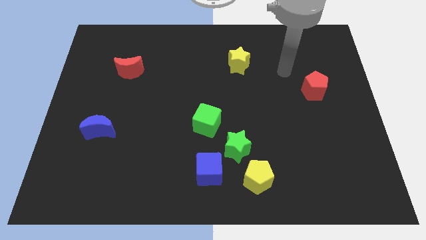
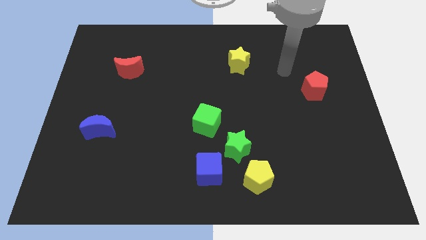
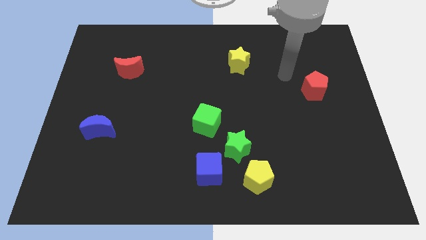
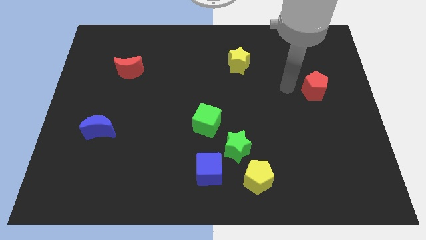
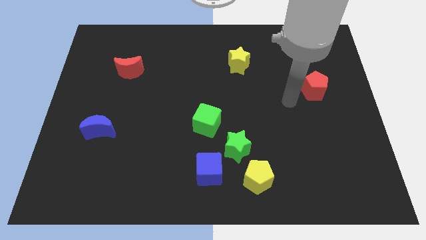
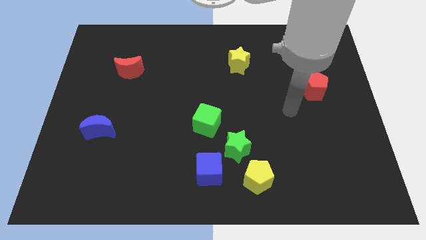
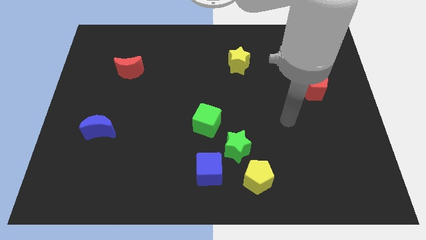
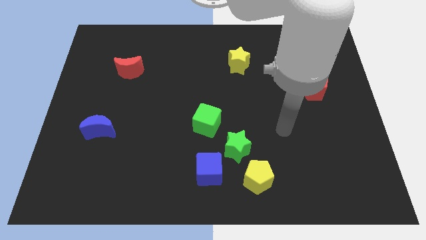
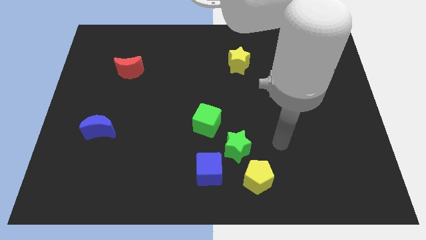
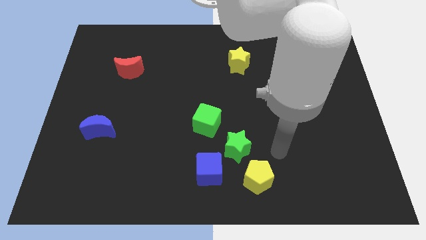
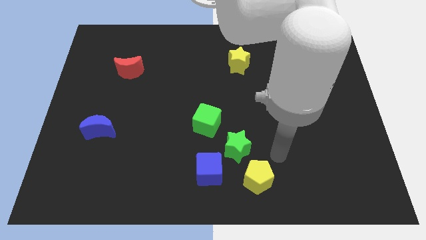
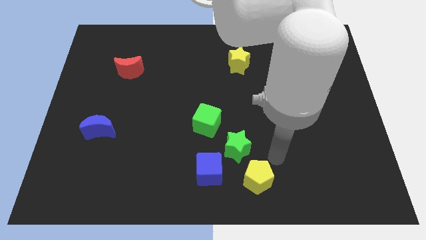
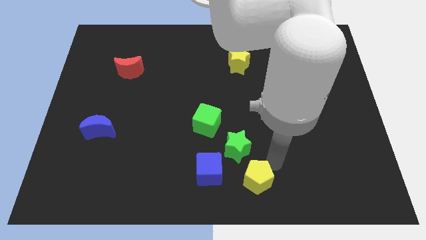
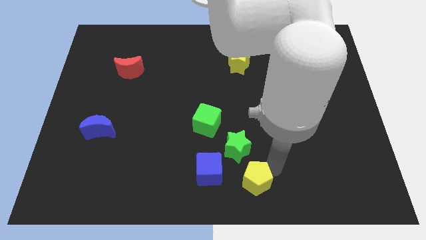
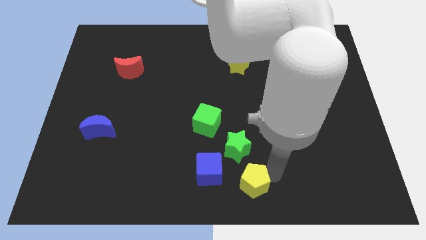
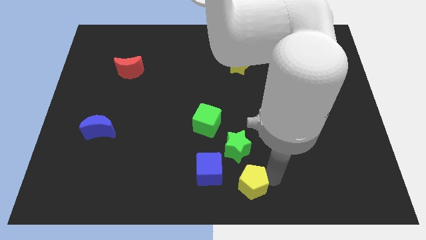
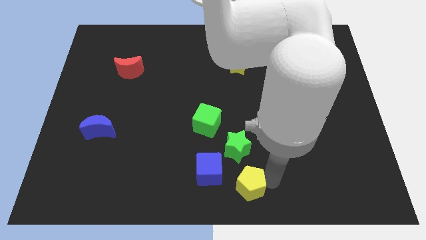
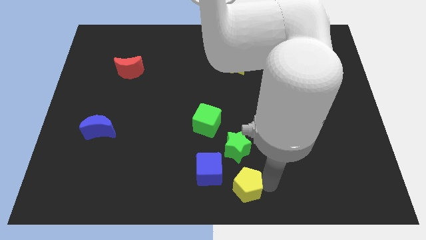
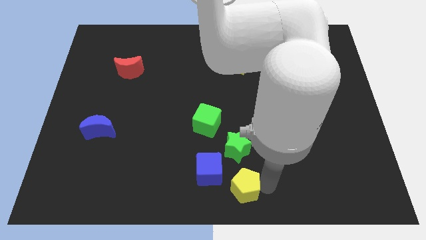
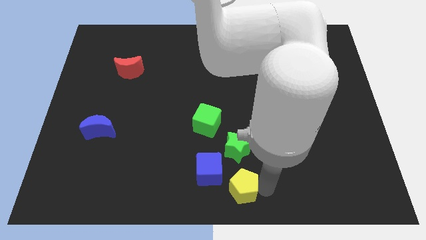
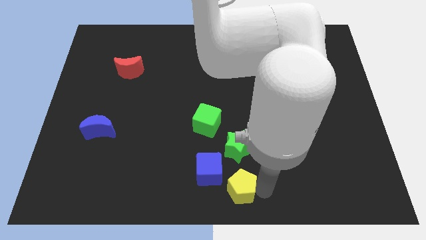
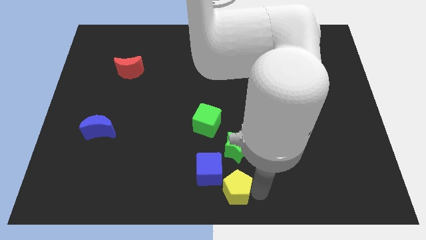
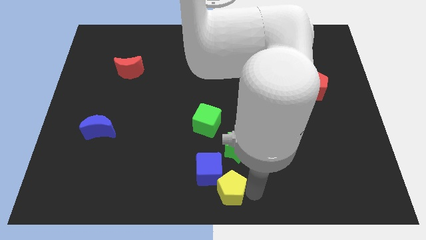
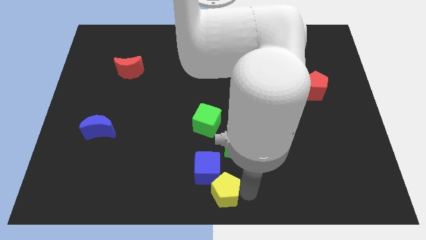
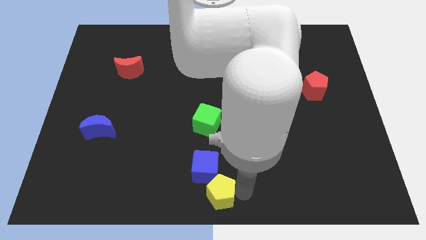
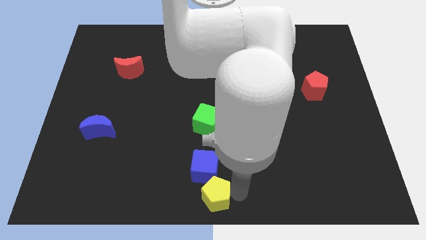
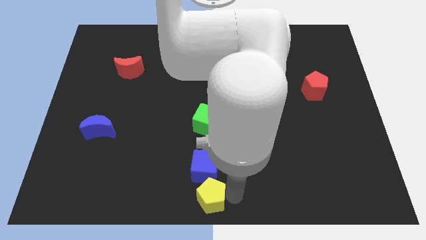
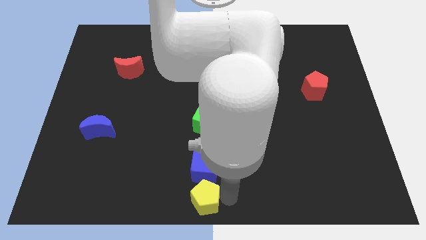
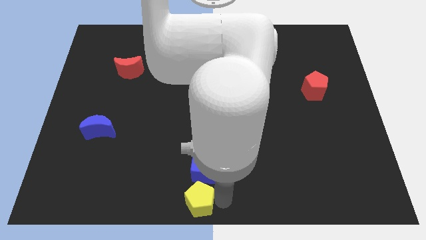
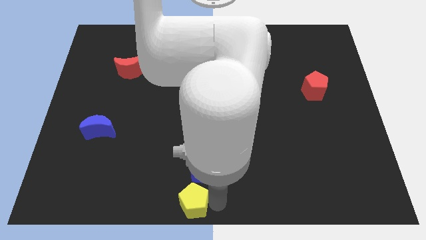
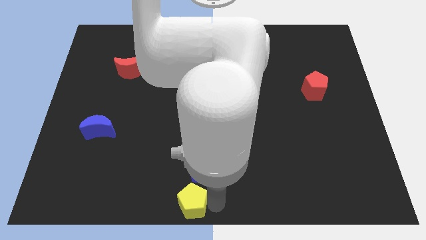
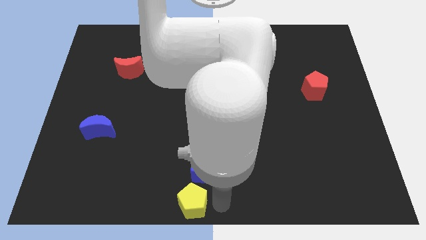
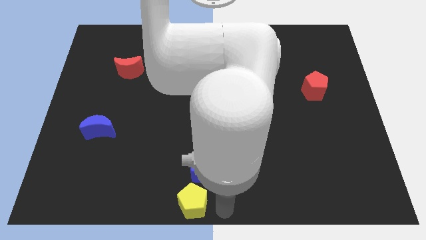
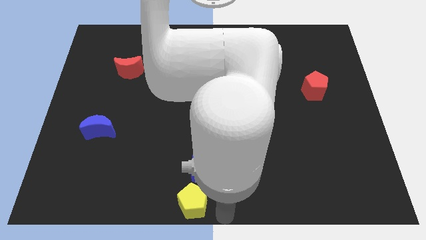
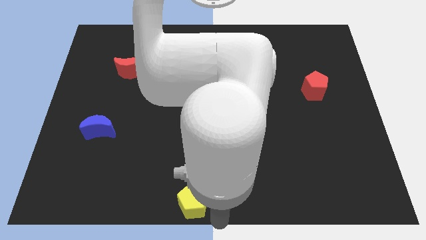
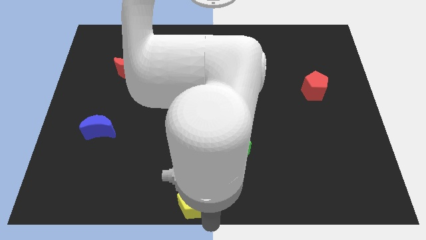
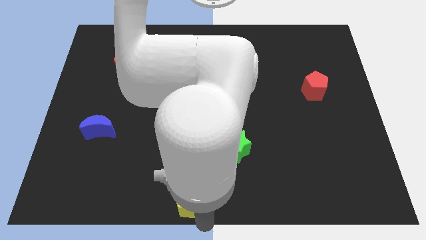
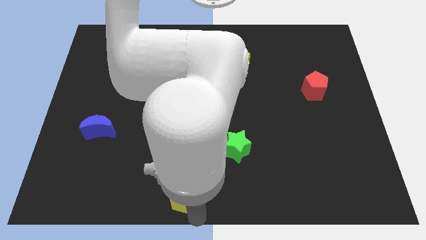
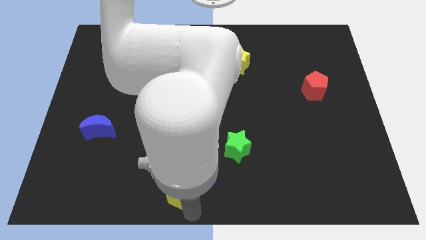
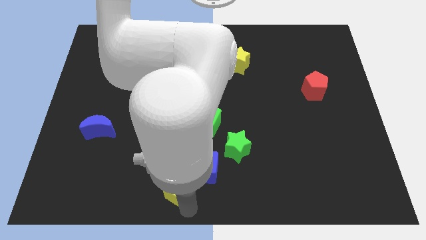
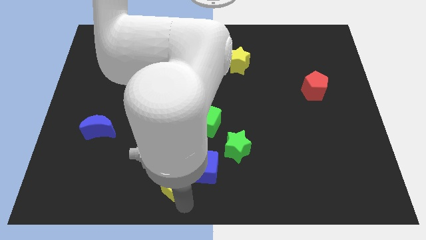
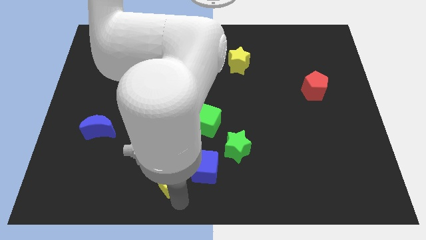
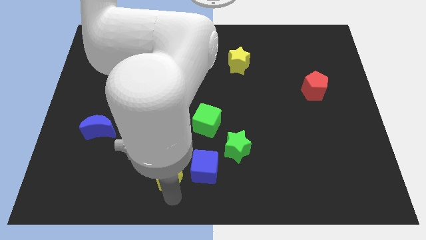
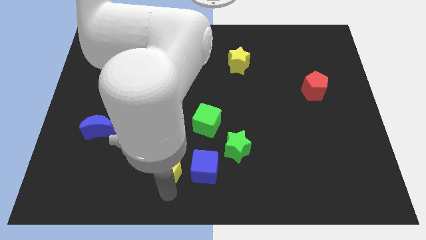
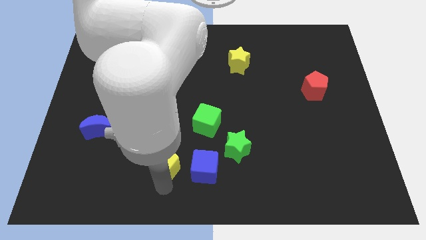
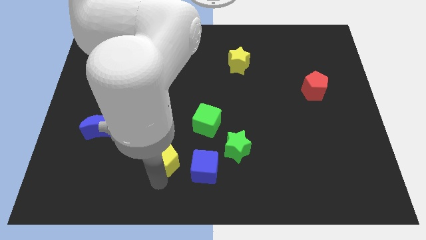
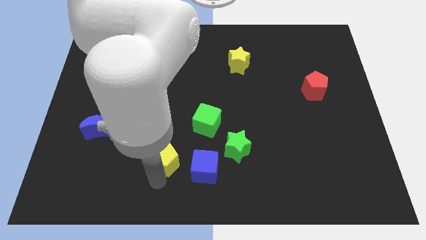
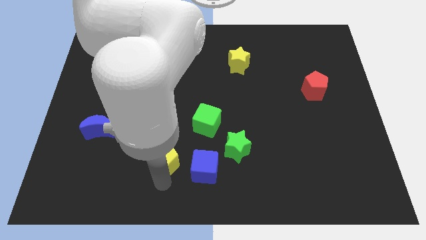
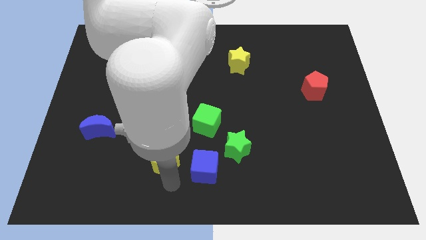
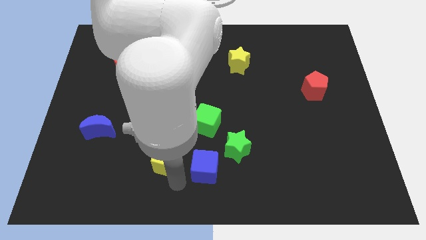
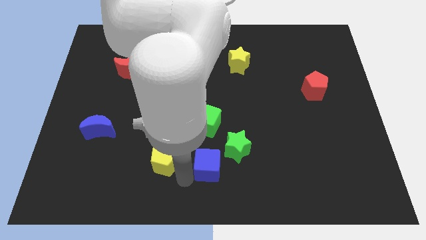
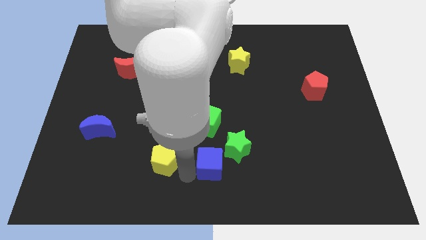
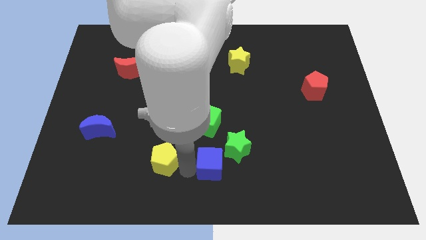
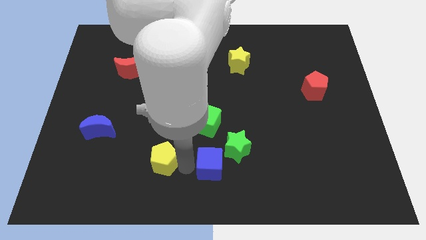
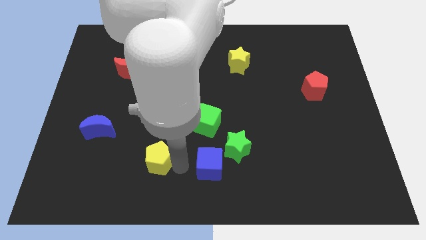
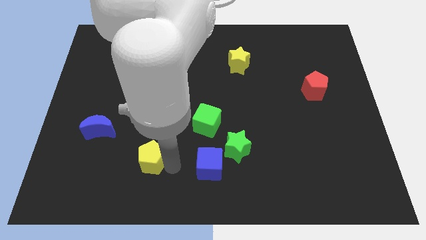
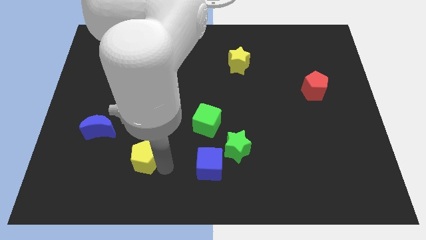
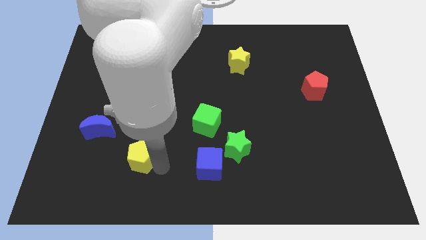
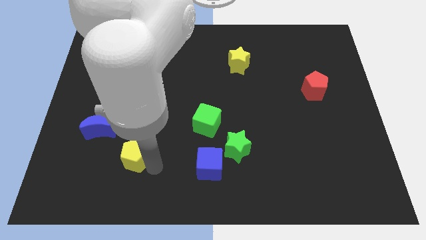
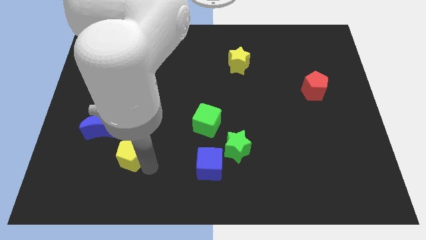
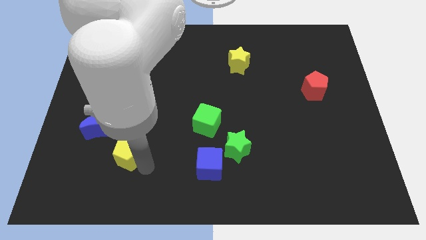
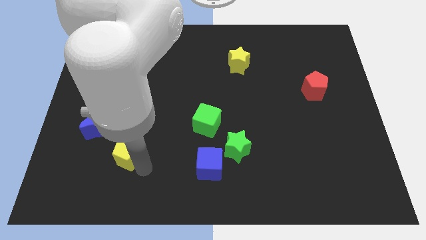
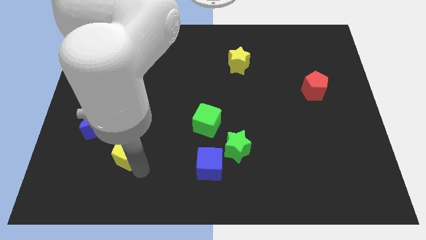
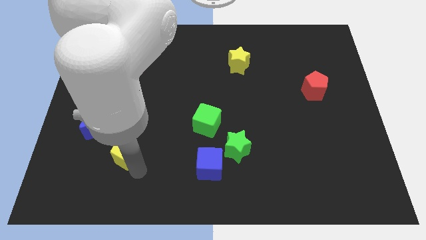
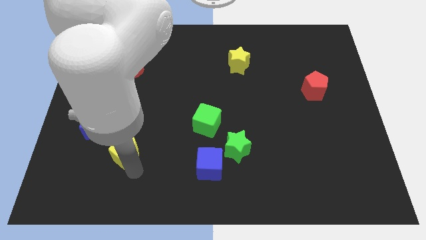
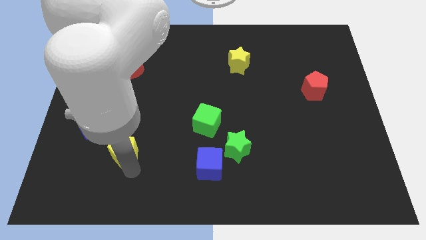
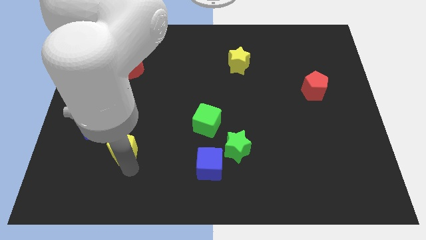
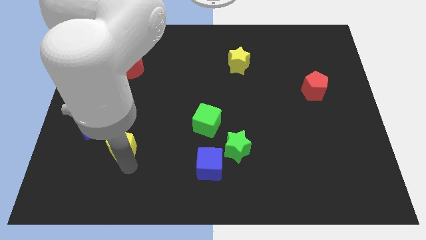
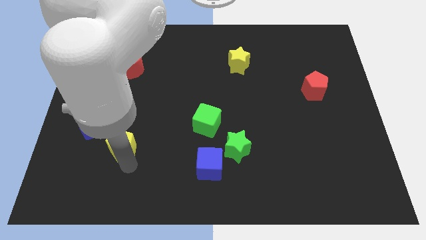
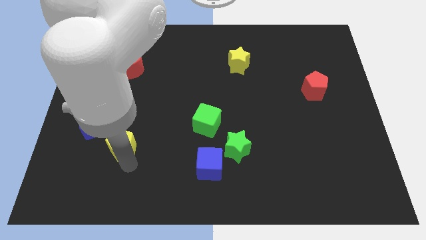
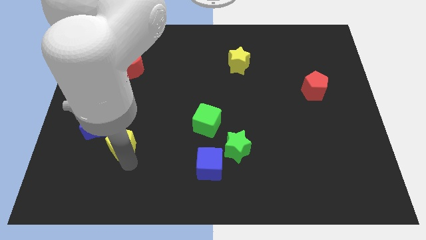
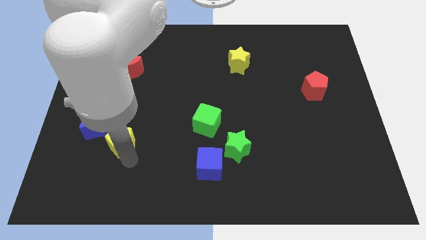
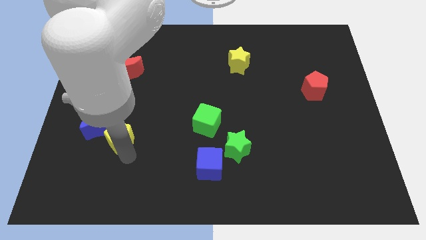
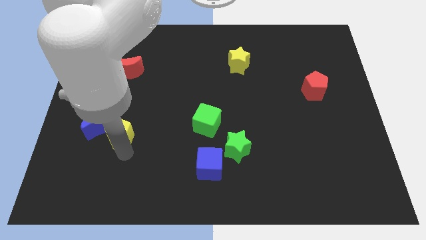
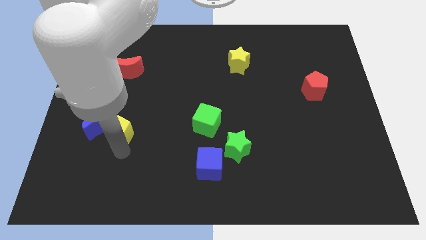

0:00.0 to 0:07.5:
move the yellow pentagon close to the blue moon

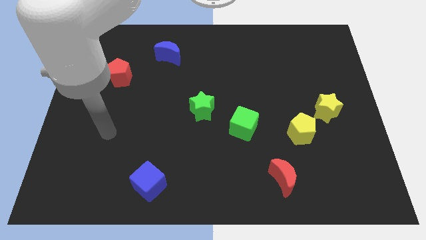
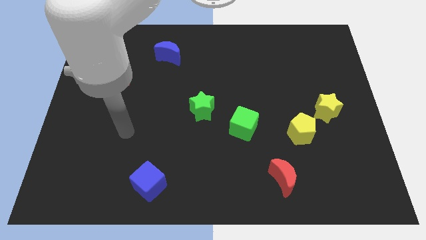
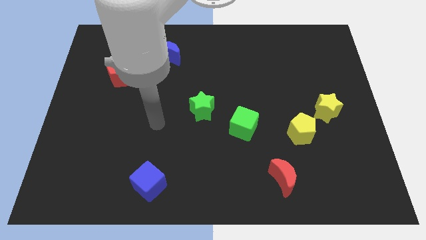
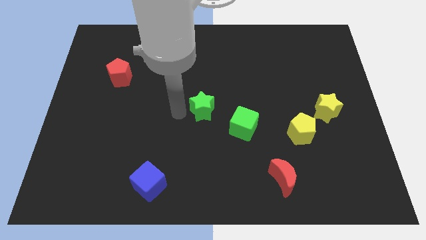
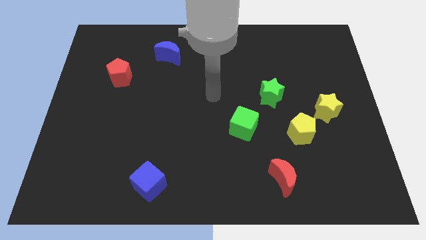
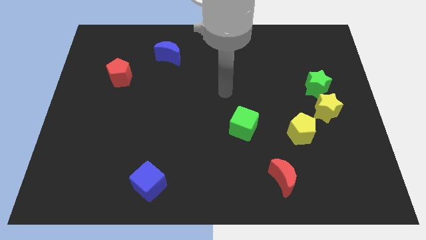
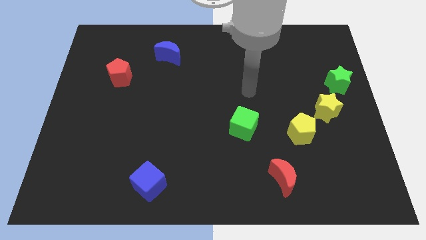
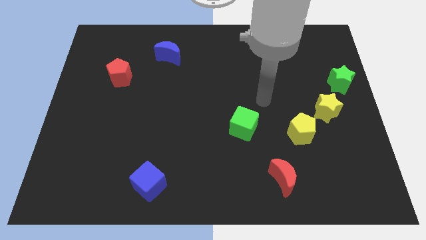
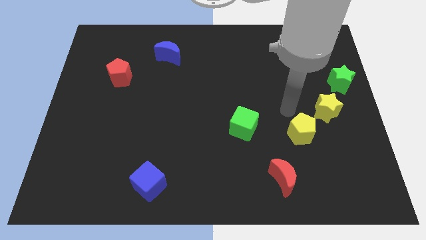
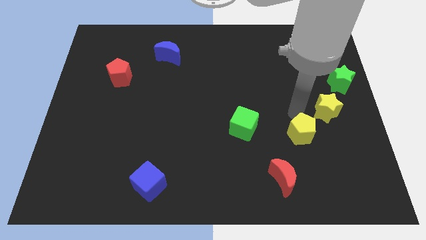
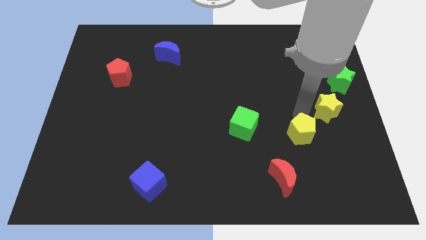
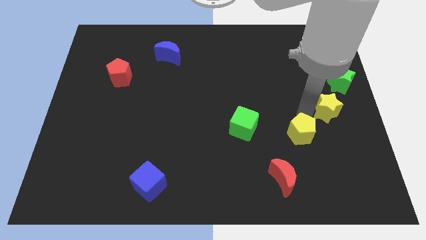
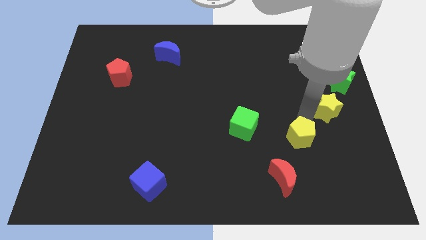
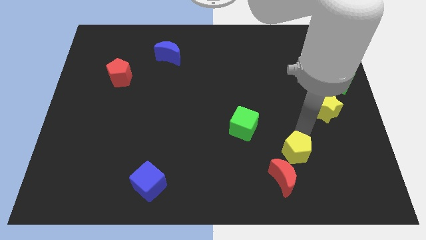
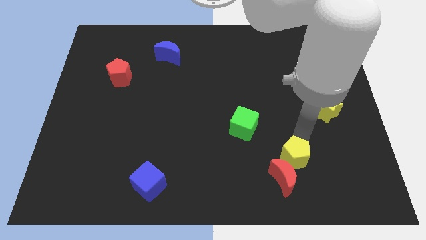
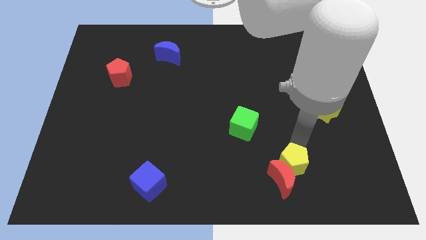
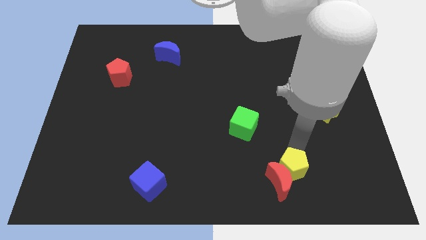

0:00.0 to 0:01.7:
push the yellow pentagon towards the red moon
